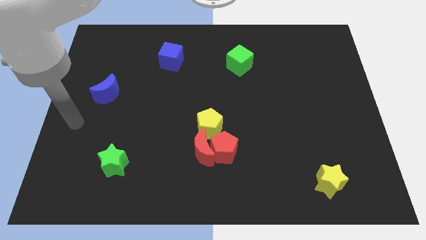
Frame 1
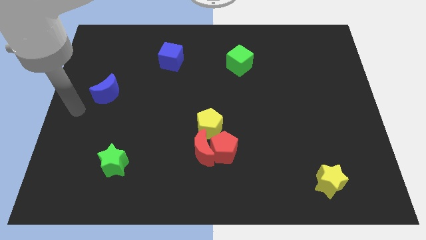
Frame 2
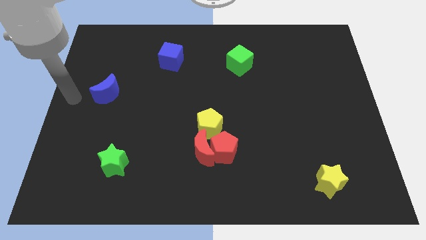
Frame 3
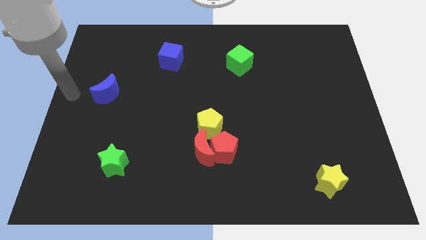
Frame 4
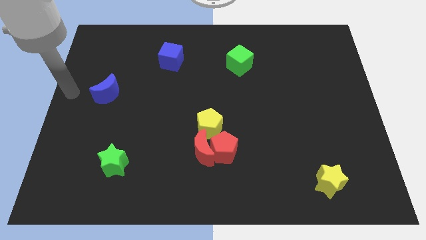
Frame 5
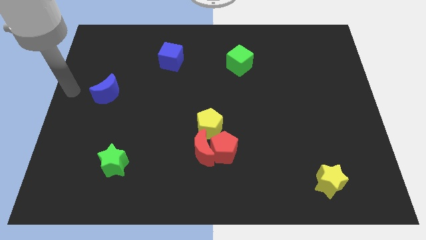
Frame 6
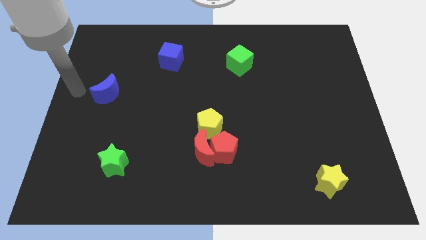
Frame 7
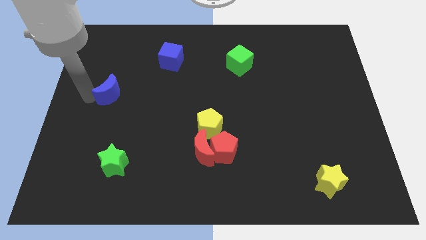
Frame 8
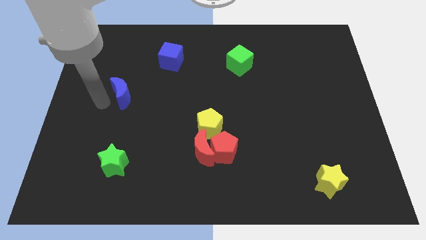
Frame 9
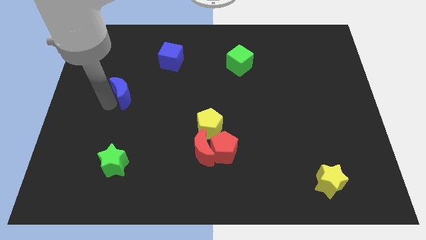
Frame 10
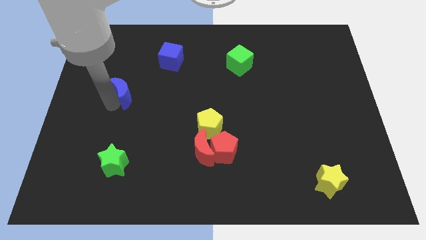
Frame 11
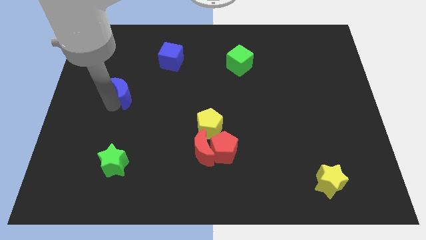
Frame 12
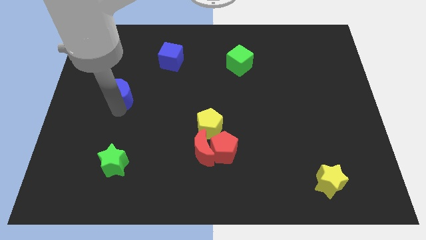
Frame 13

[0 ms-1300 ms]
place the blue crescent on top of the green star

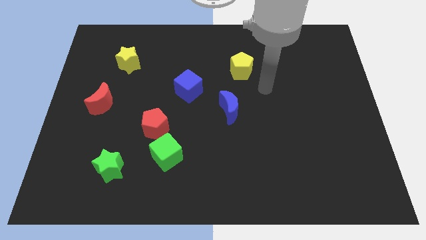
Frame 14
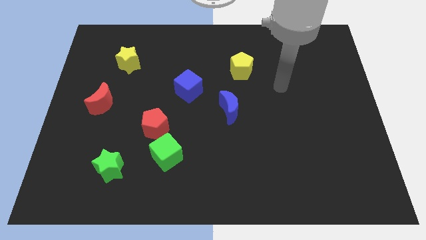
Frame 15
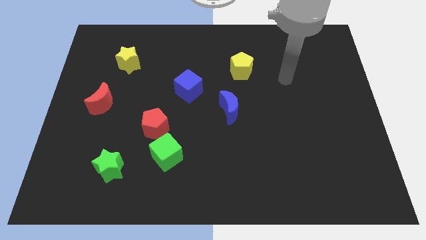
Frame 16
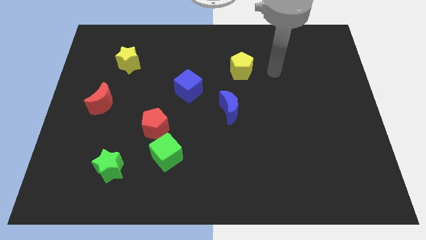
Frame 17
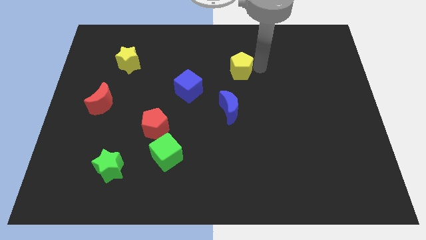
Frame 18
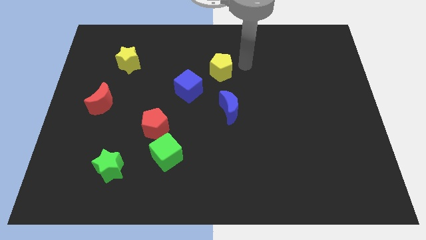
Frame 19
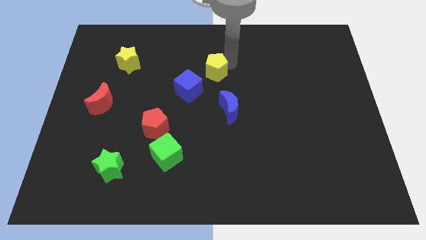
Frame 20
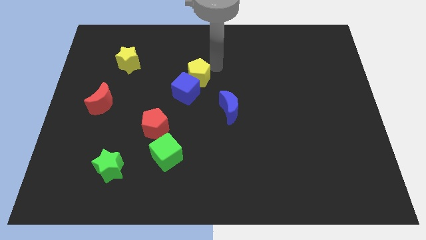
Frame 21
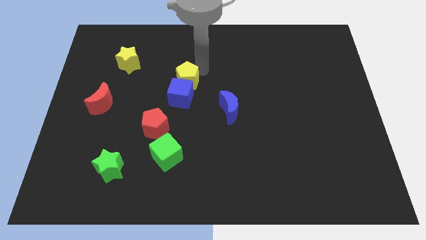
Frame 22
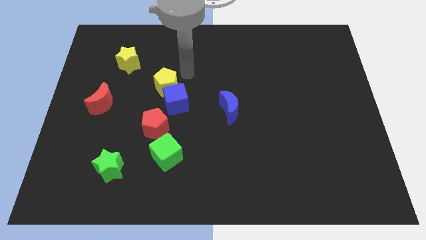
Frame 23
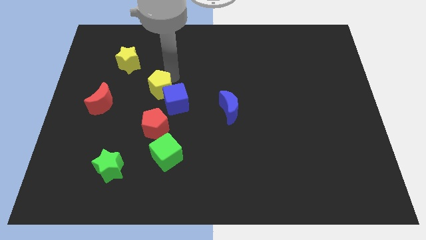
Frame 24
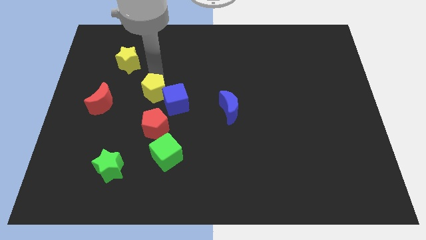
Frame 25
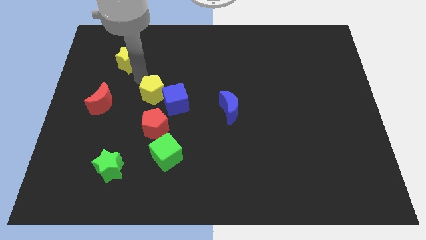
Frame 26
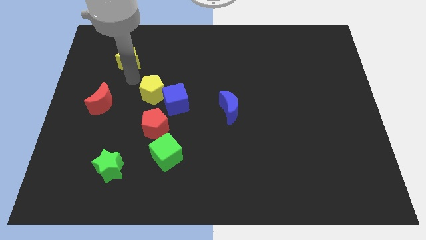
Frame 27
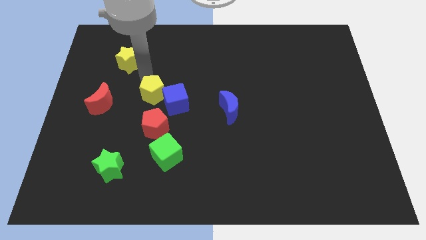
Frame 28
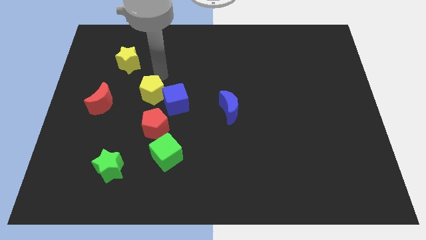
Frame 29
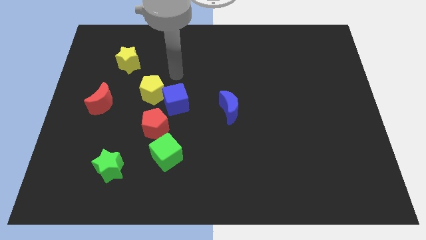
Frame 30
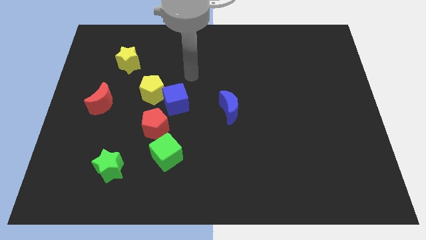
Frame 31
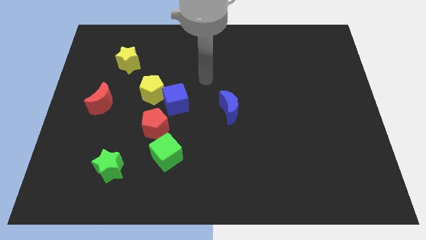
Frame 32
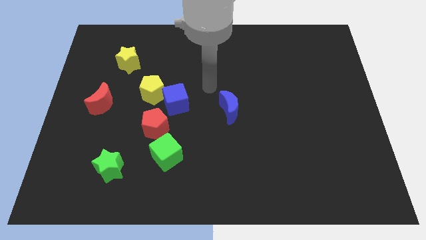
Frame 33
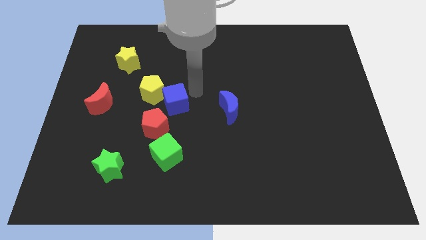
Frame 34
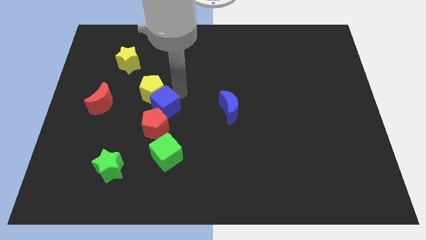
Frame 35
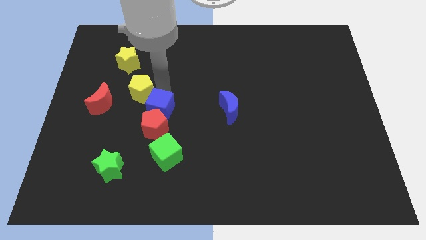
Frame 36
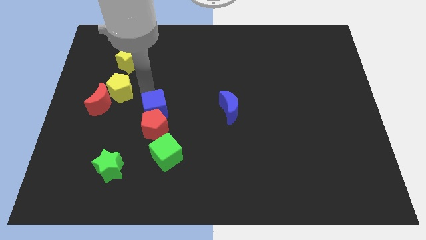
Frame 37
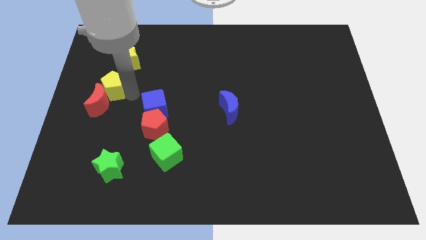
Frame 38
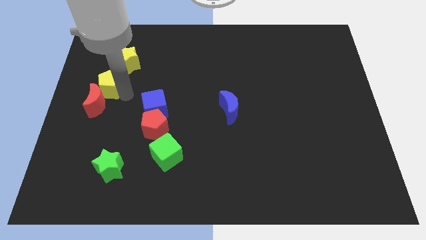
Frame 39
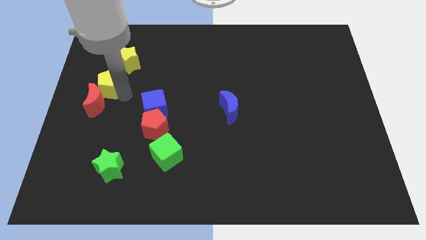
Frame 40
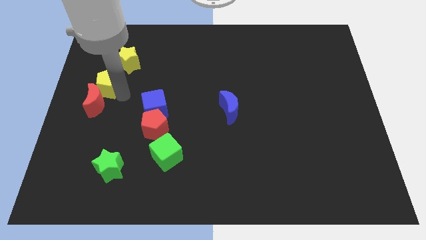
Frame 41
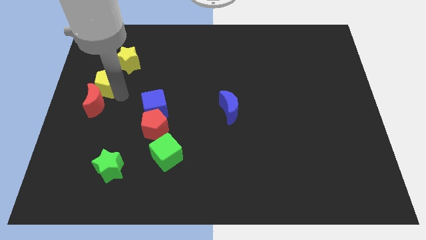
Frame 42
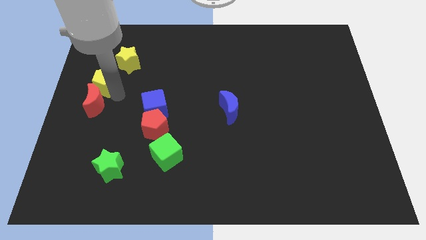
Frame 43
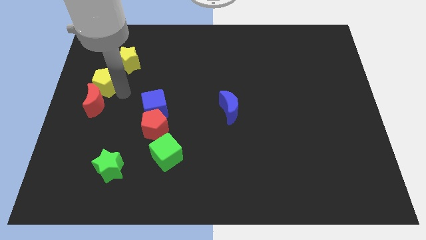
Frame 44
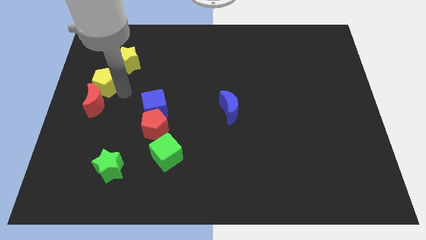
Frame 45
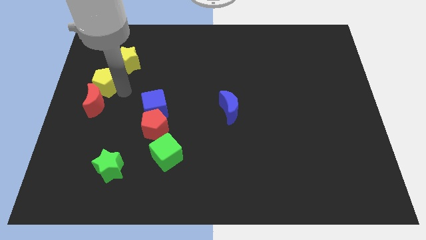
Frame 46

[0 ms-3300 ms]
place the yellow pentagon in between the yellow star and red crescent

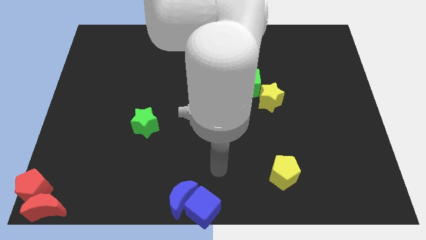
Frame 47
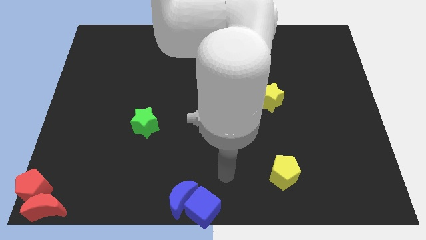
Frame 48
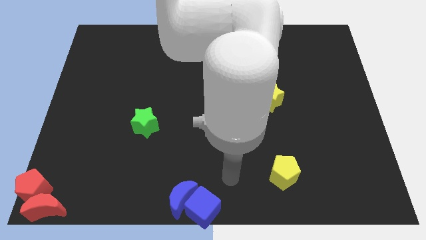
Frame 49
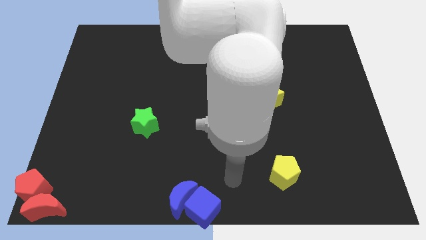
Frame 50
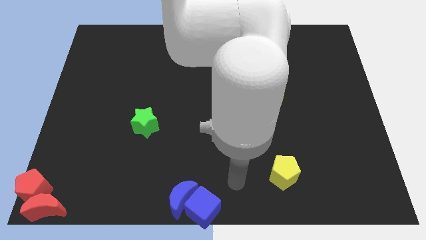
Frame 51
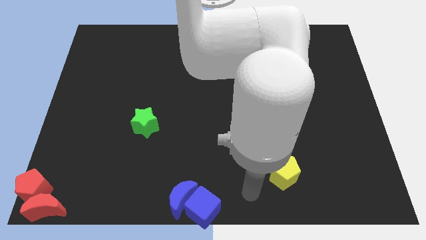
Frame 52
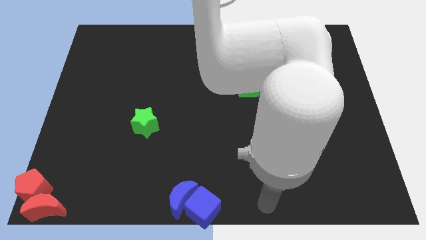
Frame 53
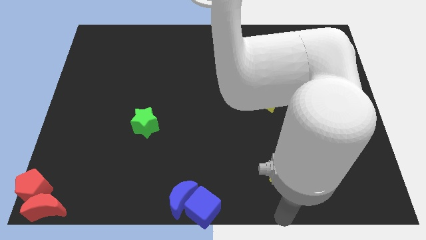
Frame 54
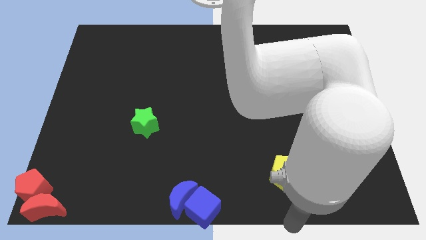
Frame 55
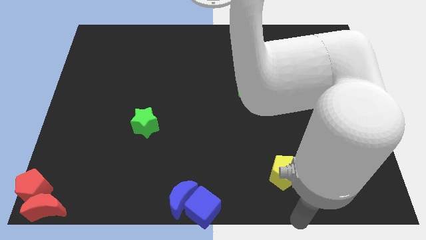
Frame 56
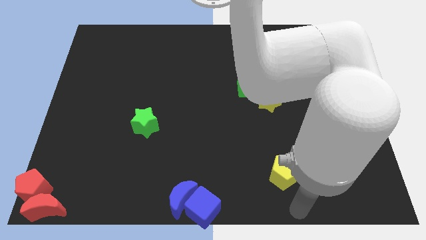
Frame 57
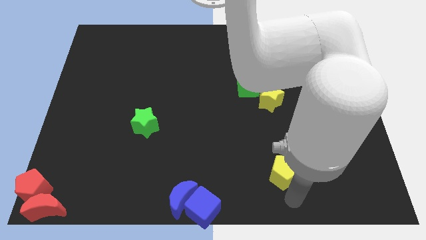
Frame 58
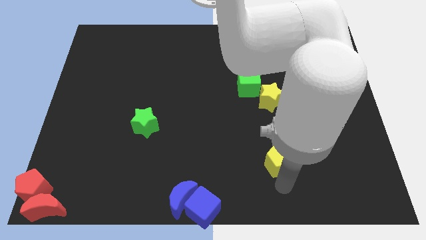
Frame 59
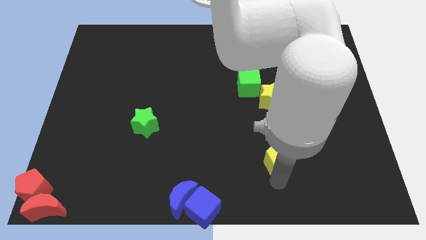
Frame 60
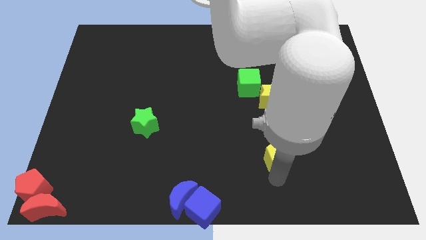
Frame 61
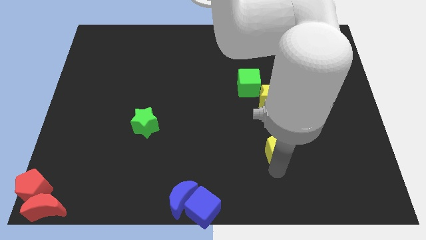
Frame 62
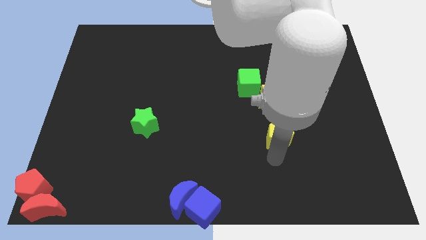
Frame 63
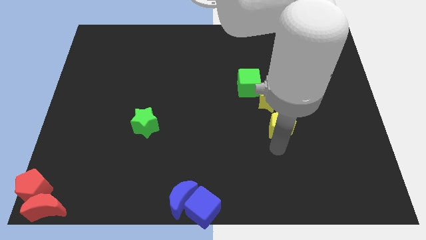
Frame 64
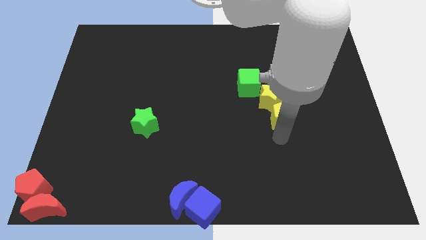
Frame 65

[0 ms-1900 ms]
push the yellow pentagon towards the yellow star

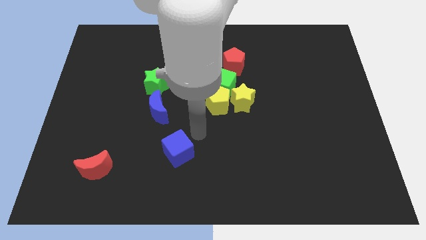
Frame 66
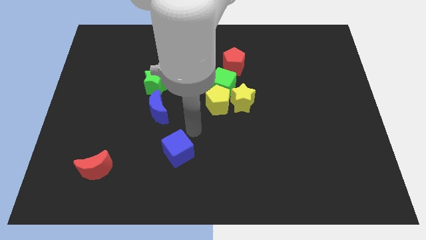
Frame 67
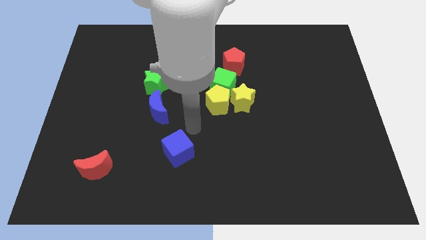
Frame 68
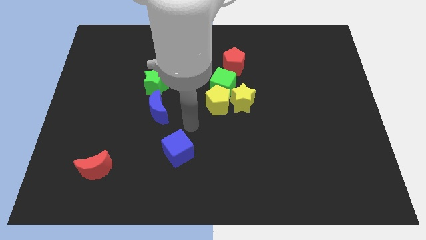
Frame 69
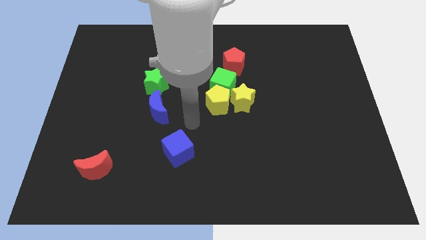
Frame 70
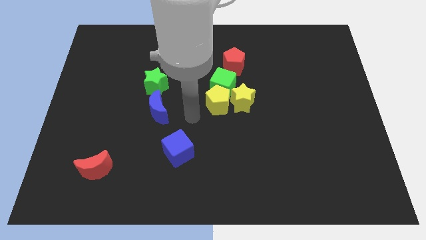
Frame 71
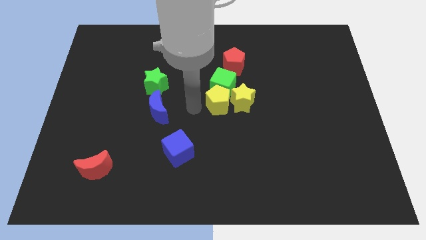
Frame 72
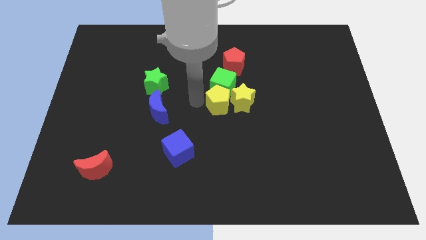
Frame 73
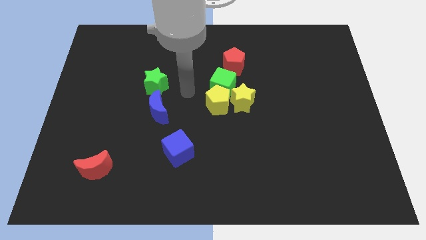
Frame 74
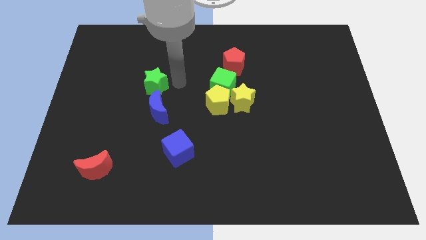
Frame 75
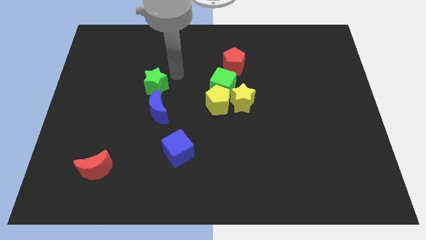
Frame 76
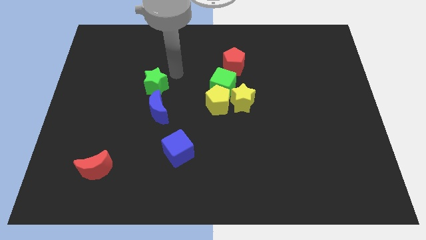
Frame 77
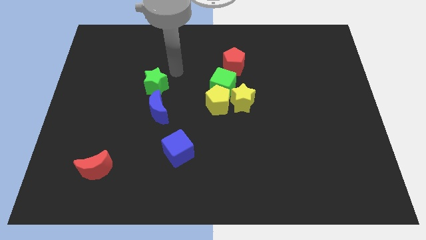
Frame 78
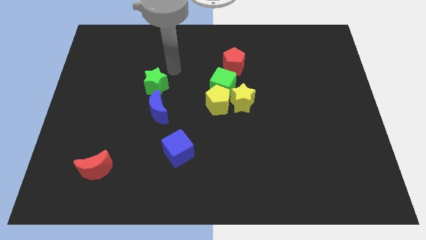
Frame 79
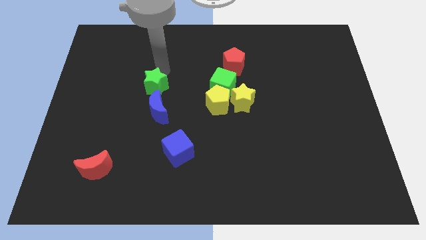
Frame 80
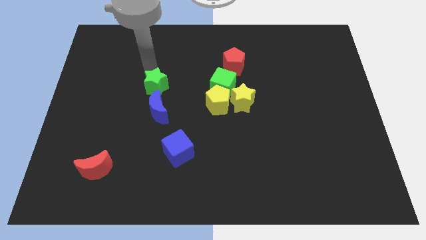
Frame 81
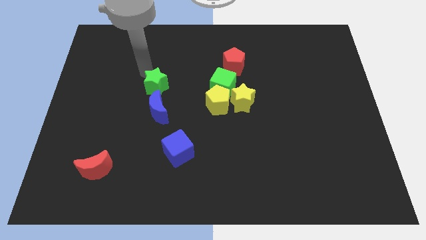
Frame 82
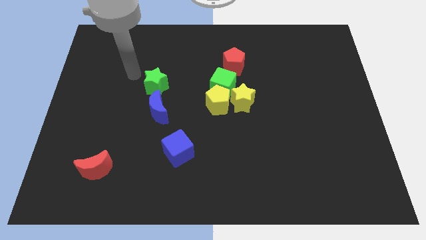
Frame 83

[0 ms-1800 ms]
move your arm towards the top left side of the green star

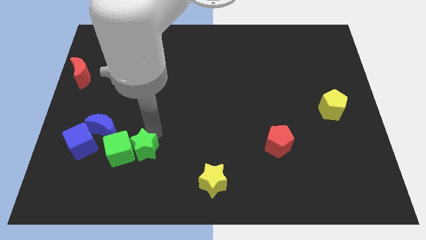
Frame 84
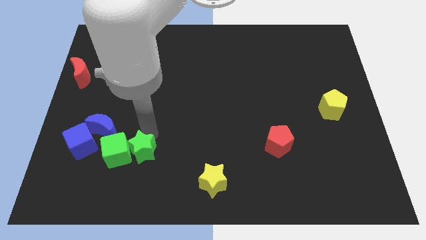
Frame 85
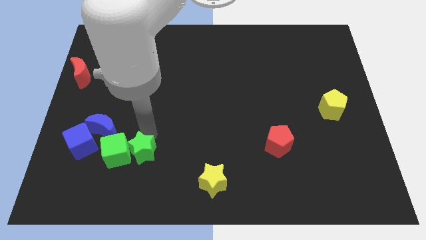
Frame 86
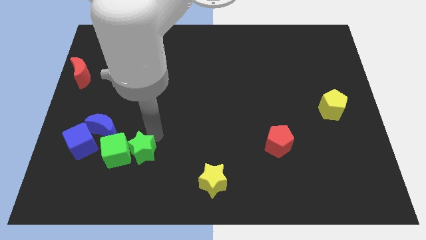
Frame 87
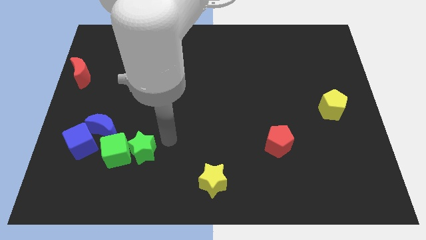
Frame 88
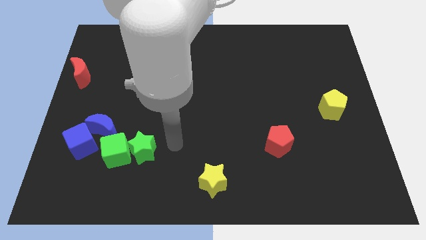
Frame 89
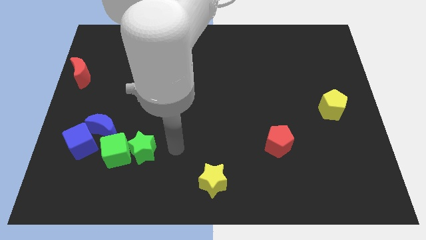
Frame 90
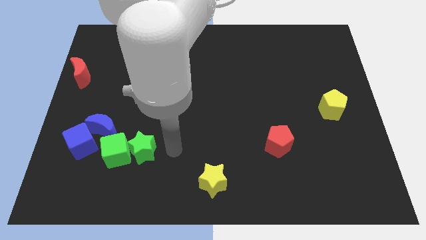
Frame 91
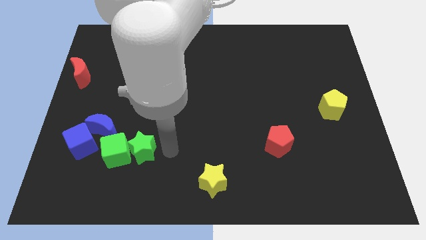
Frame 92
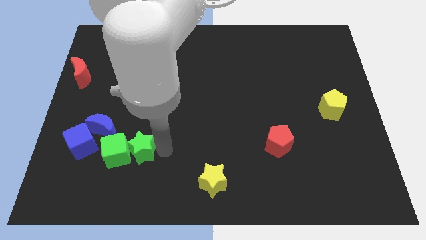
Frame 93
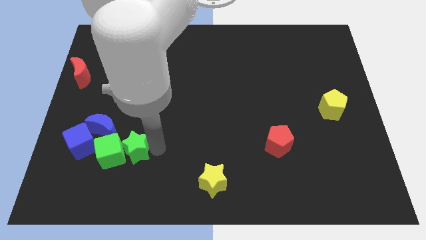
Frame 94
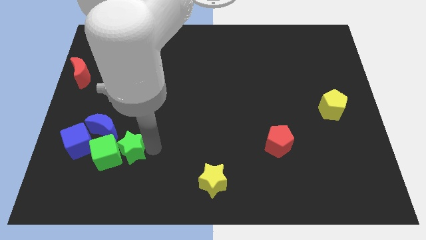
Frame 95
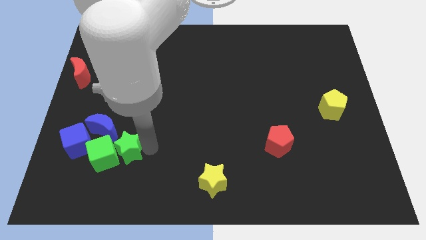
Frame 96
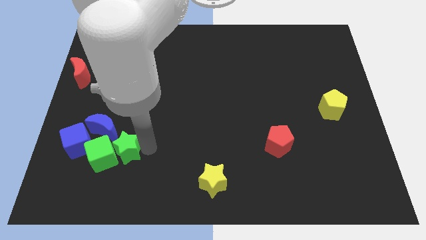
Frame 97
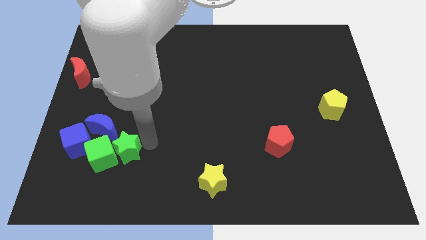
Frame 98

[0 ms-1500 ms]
push the green cube into the blue cube with green star towards the bottom left of the board
